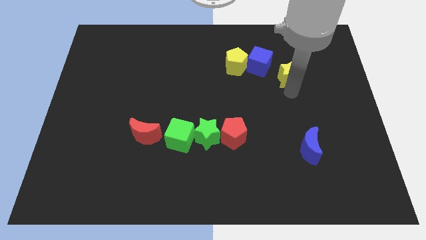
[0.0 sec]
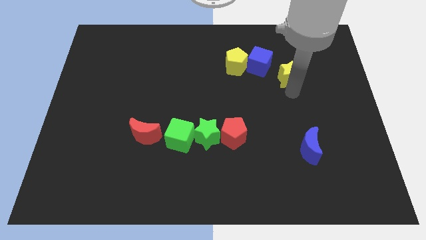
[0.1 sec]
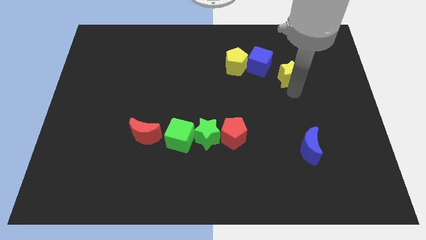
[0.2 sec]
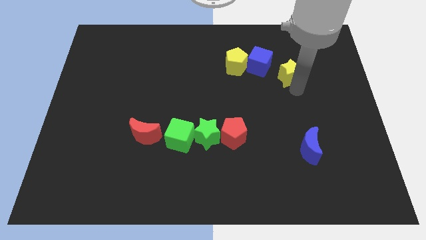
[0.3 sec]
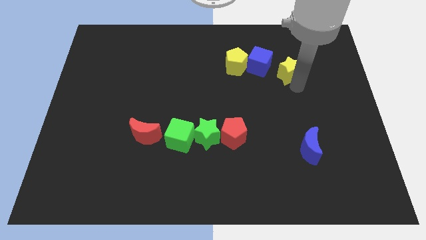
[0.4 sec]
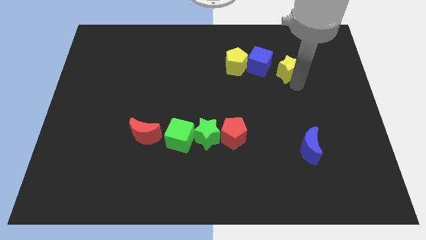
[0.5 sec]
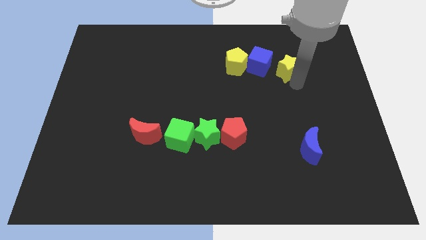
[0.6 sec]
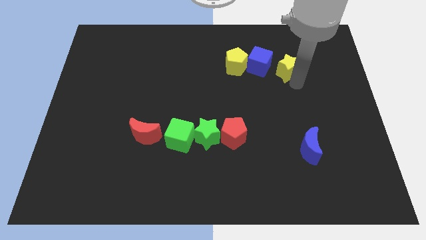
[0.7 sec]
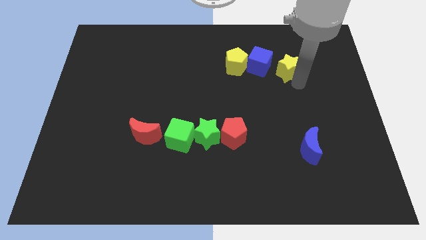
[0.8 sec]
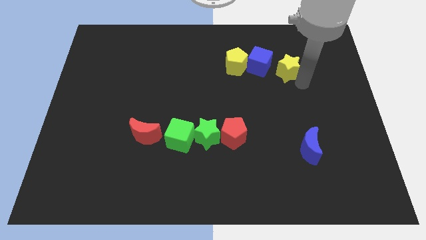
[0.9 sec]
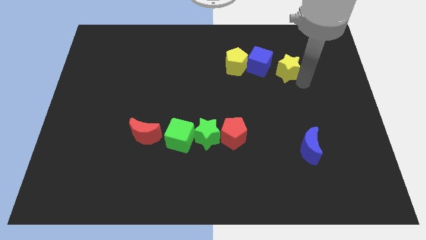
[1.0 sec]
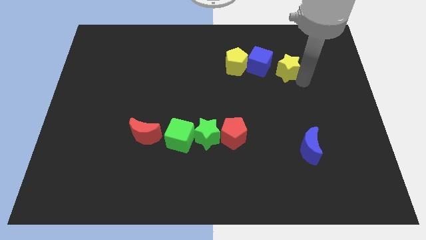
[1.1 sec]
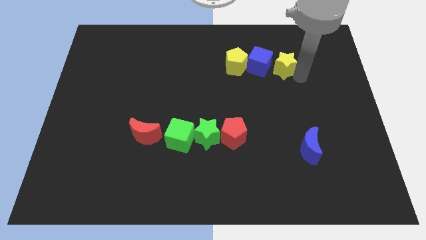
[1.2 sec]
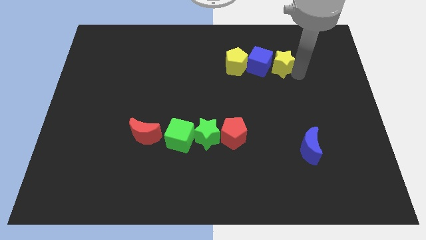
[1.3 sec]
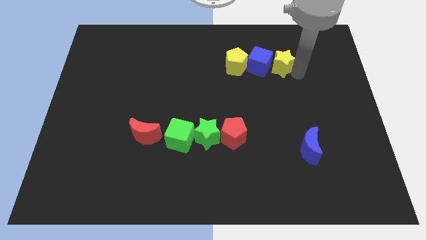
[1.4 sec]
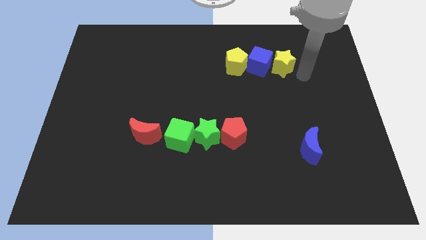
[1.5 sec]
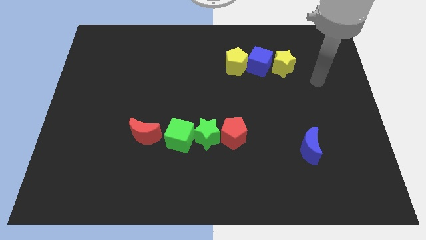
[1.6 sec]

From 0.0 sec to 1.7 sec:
push the yellow star to the right of blue cube

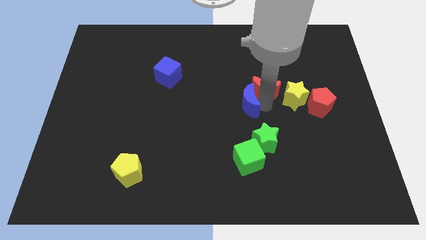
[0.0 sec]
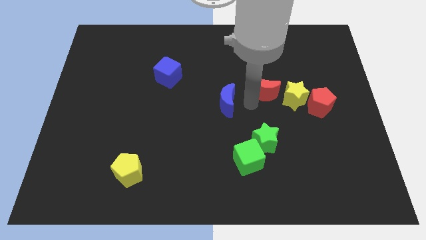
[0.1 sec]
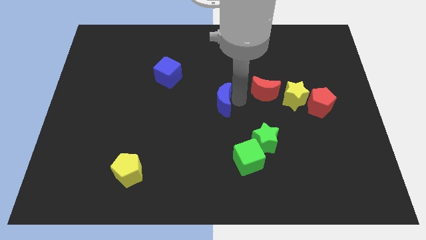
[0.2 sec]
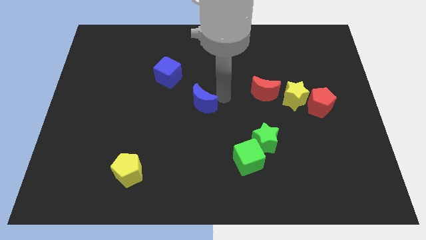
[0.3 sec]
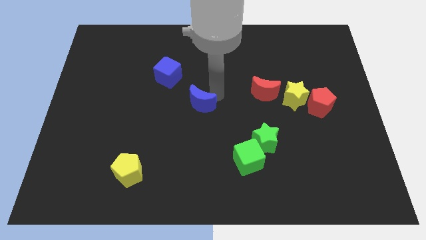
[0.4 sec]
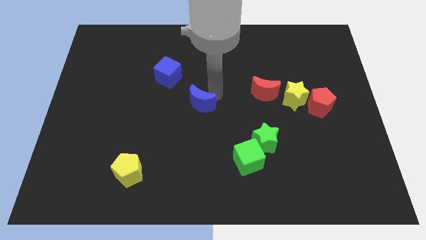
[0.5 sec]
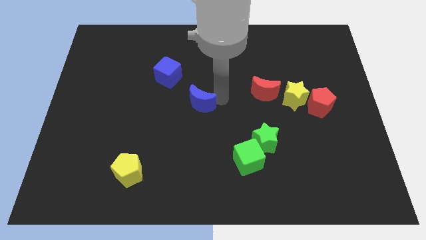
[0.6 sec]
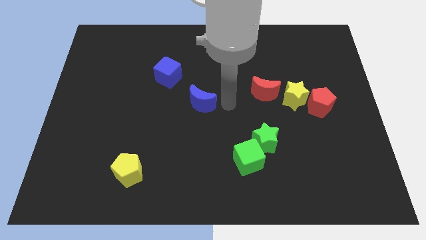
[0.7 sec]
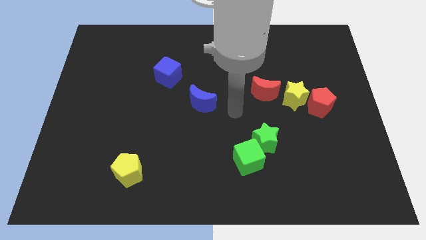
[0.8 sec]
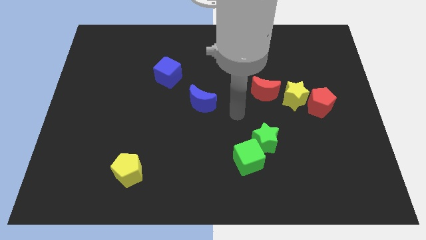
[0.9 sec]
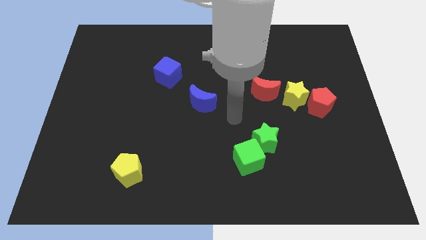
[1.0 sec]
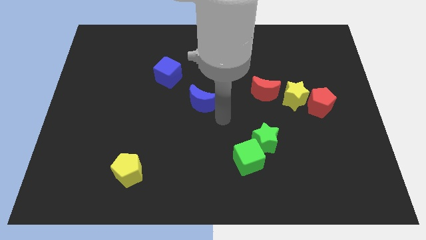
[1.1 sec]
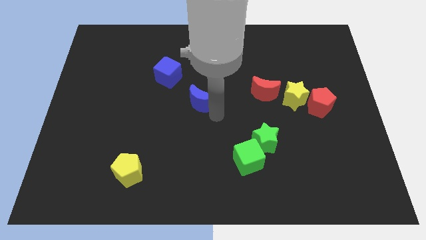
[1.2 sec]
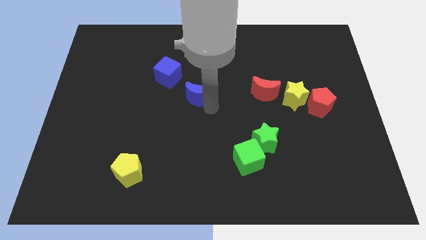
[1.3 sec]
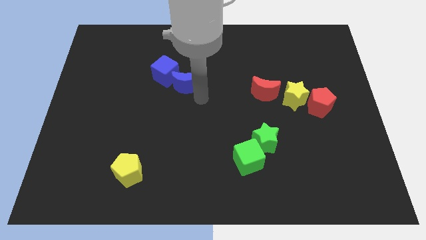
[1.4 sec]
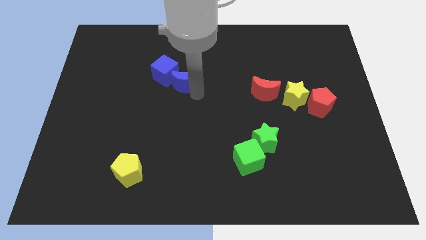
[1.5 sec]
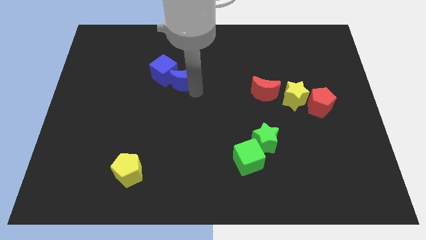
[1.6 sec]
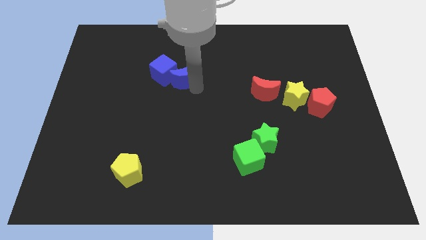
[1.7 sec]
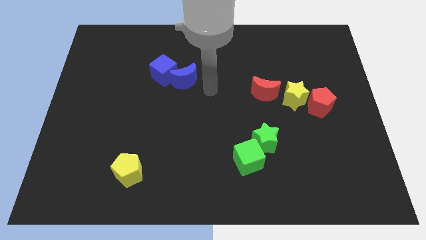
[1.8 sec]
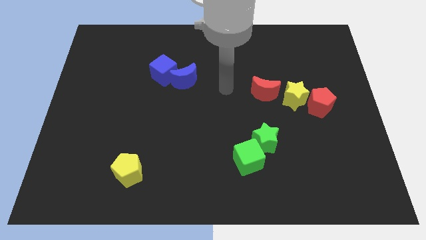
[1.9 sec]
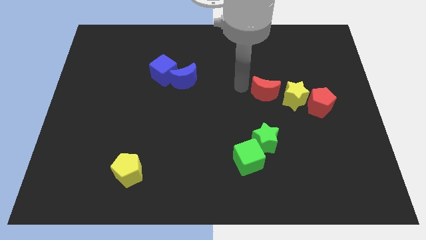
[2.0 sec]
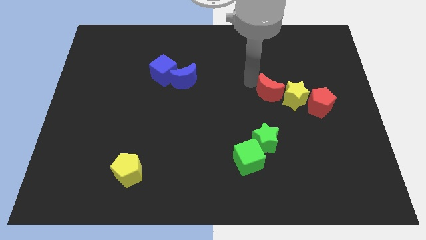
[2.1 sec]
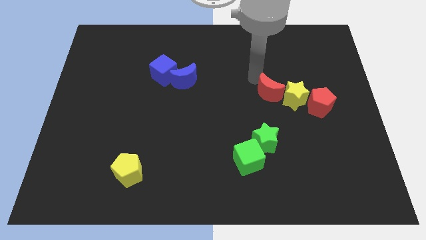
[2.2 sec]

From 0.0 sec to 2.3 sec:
move the blue crescent bottom right to the blue cube

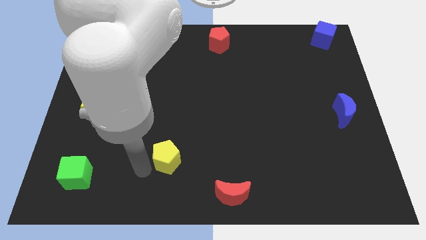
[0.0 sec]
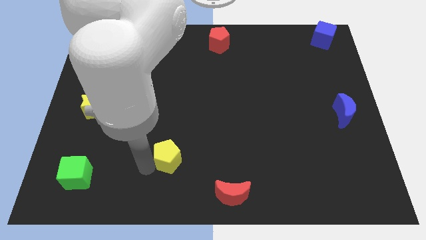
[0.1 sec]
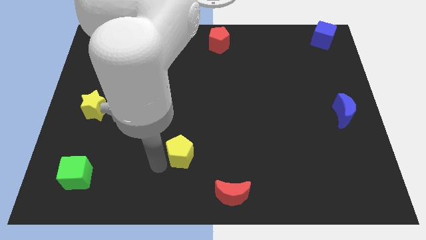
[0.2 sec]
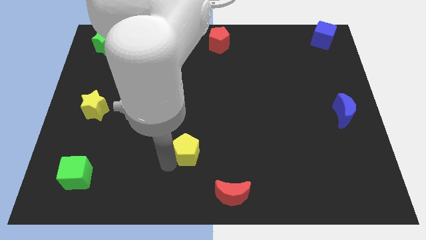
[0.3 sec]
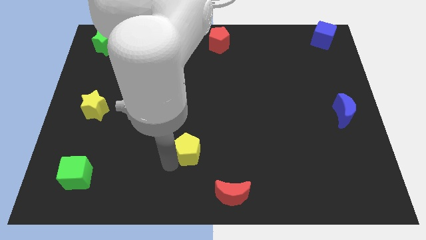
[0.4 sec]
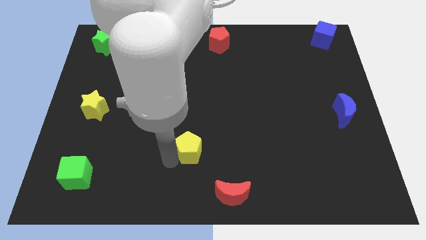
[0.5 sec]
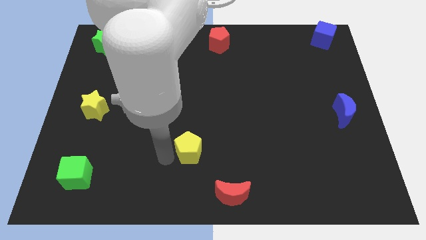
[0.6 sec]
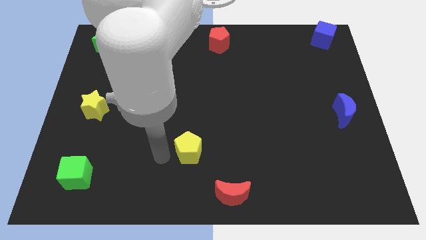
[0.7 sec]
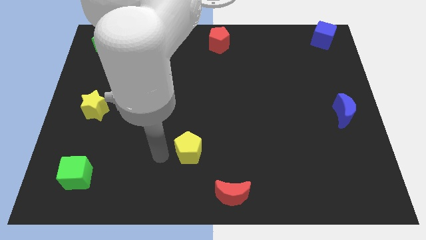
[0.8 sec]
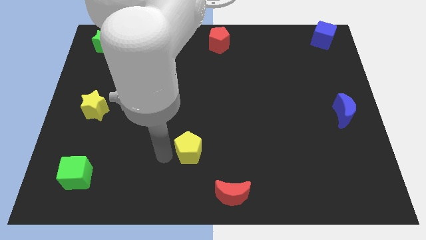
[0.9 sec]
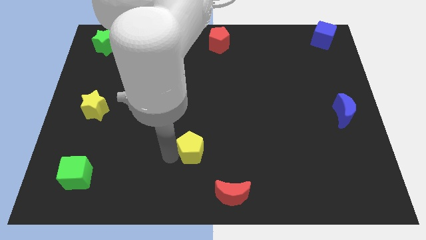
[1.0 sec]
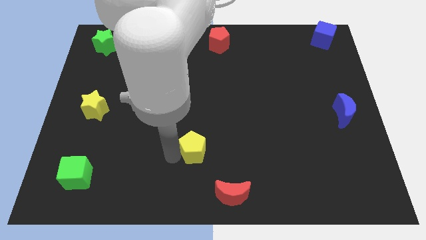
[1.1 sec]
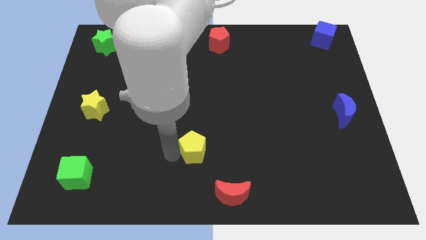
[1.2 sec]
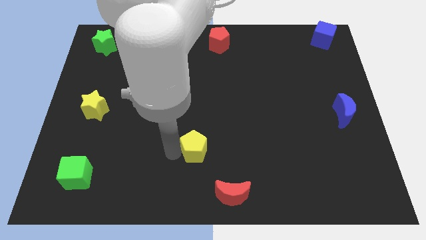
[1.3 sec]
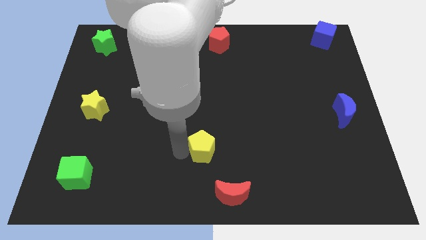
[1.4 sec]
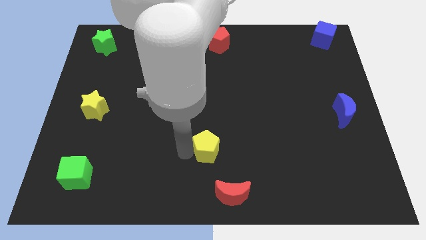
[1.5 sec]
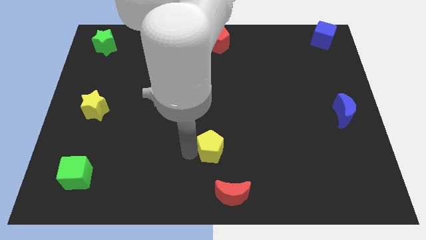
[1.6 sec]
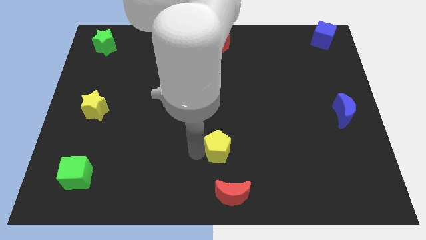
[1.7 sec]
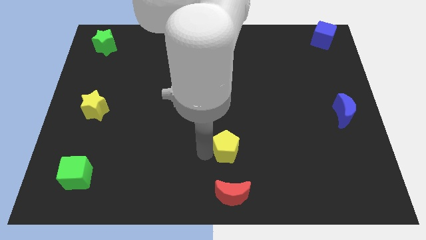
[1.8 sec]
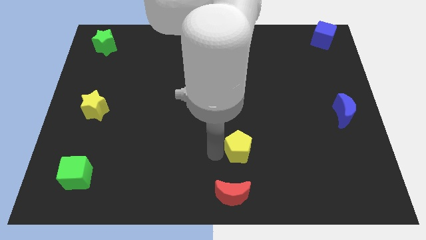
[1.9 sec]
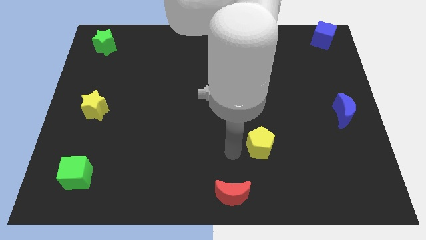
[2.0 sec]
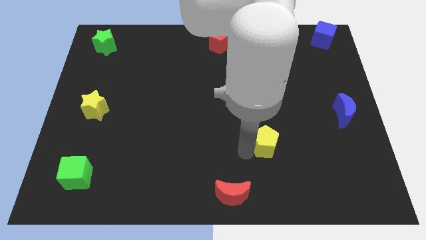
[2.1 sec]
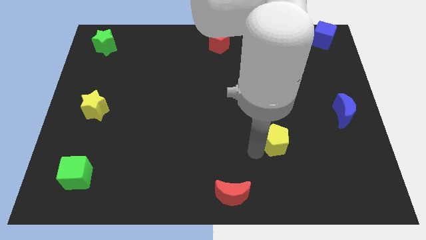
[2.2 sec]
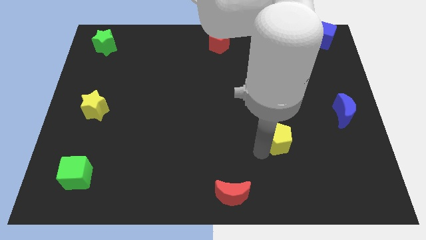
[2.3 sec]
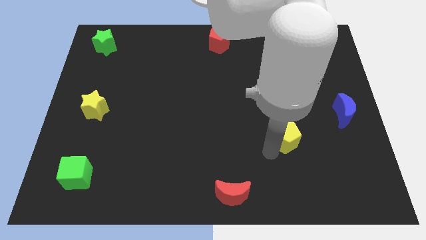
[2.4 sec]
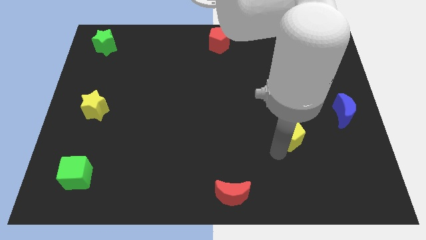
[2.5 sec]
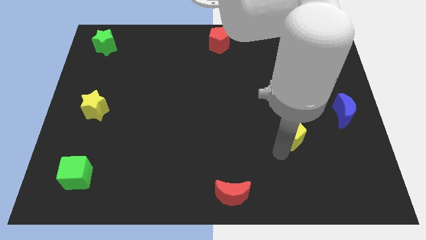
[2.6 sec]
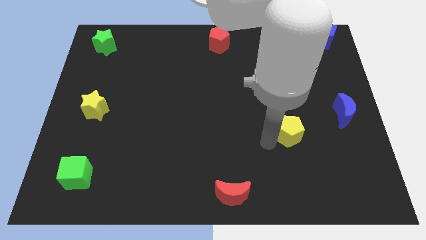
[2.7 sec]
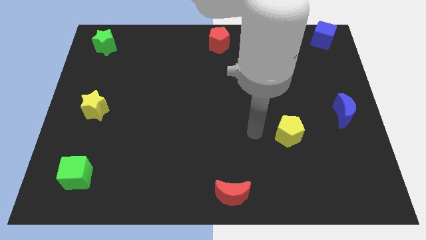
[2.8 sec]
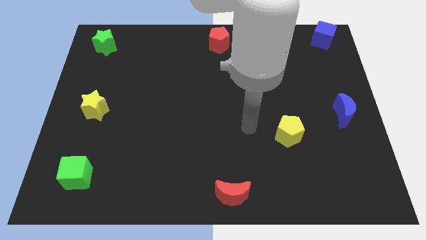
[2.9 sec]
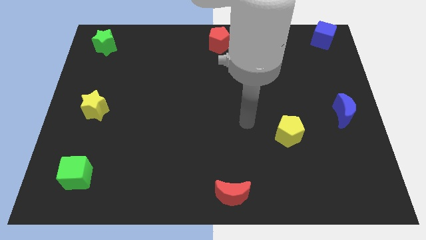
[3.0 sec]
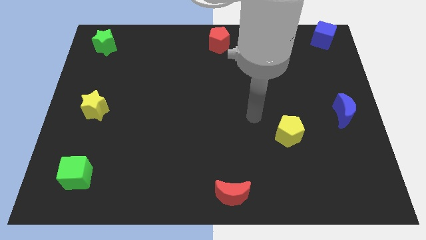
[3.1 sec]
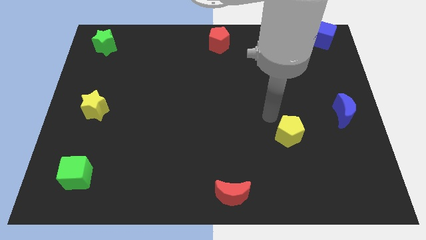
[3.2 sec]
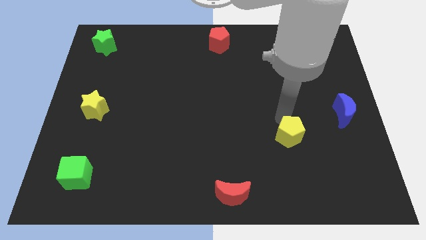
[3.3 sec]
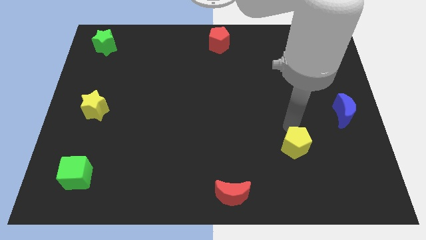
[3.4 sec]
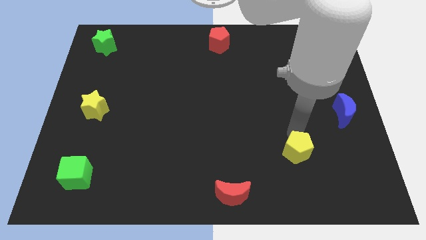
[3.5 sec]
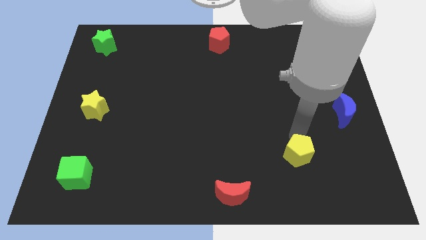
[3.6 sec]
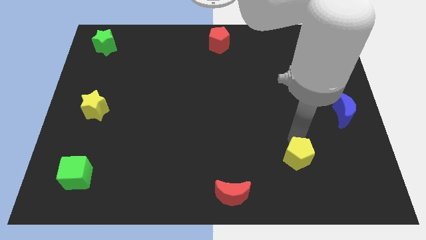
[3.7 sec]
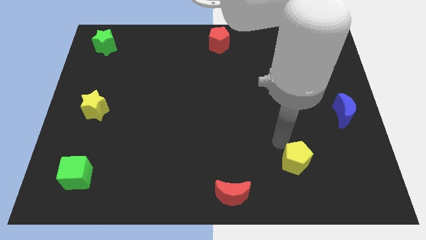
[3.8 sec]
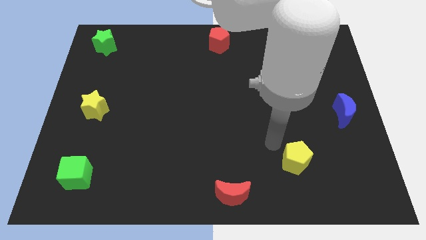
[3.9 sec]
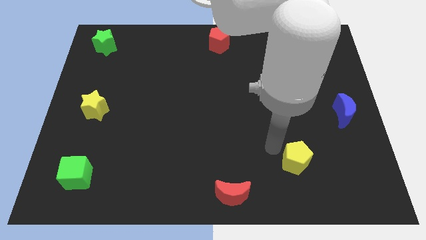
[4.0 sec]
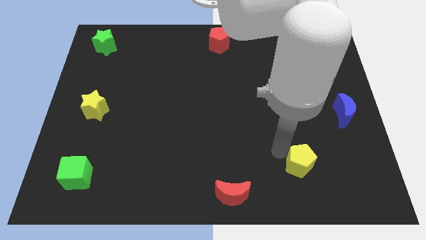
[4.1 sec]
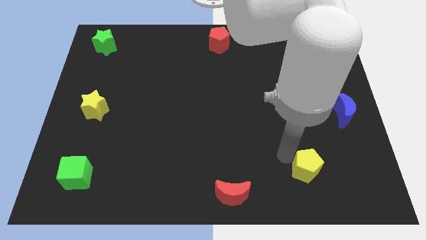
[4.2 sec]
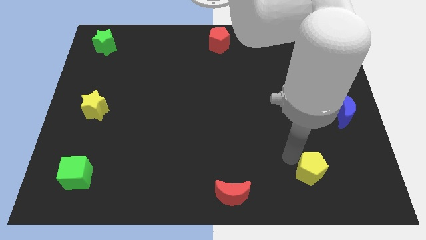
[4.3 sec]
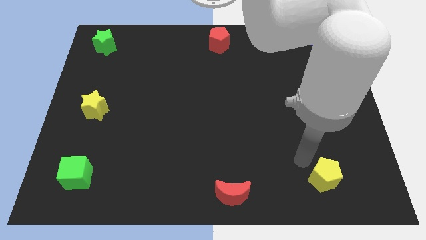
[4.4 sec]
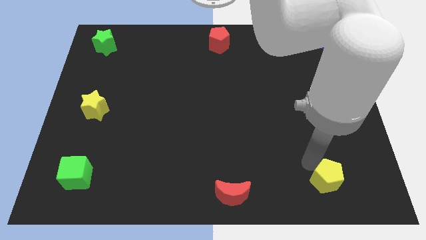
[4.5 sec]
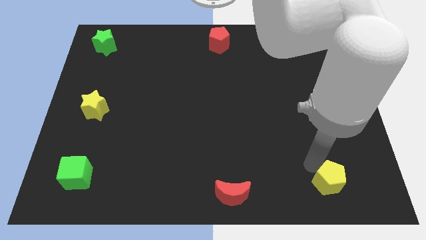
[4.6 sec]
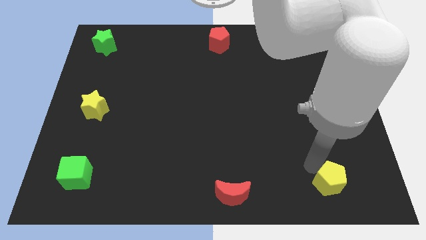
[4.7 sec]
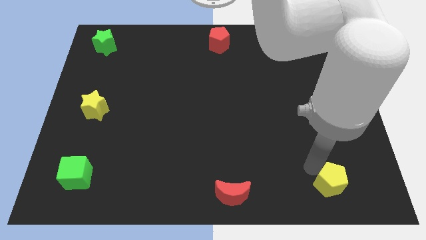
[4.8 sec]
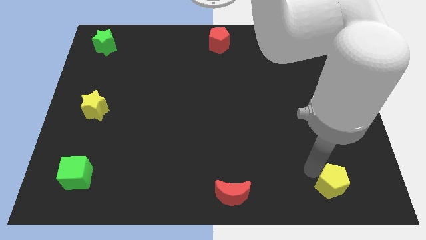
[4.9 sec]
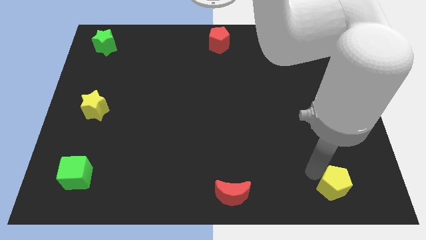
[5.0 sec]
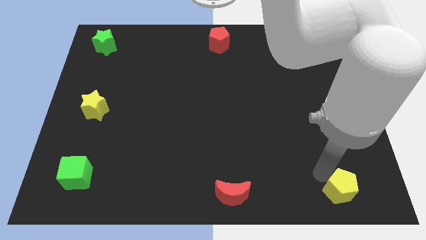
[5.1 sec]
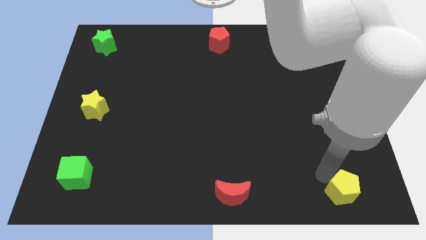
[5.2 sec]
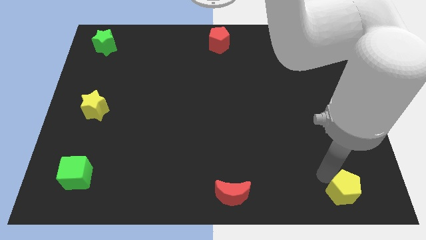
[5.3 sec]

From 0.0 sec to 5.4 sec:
move yellow pentagon towards bottom right of the board
